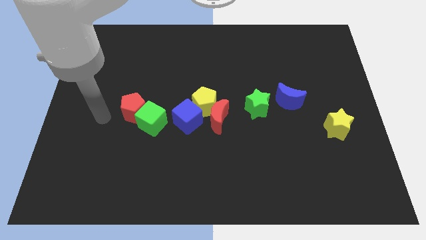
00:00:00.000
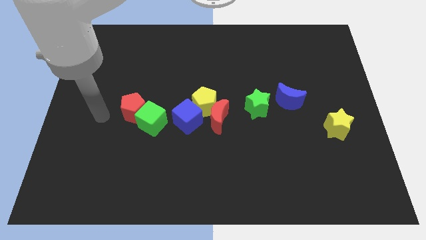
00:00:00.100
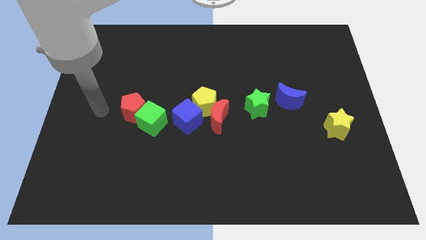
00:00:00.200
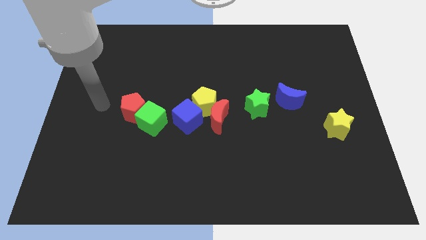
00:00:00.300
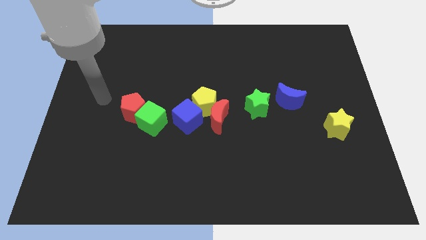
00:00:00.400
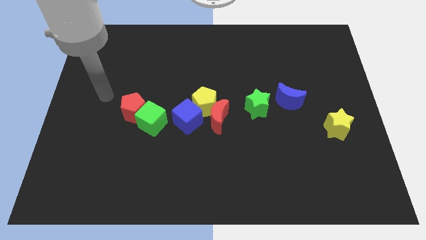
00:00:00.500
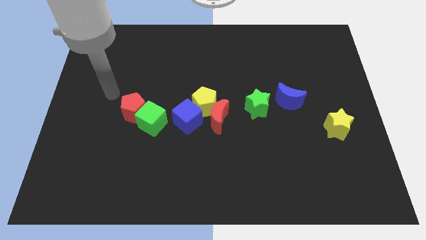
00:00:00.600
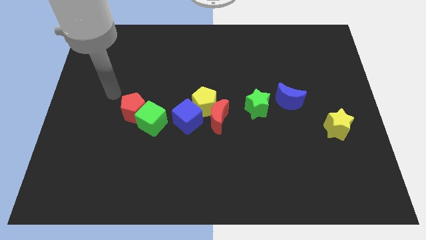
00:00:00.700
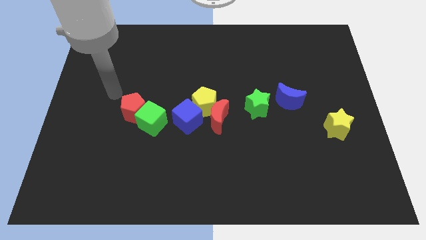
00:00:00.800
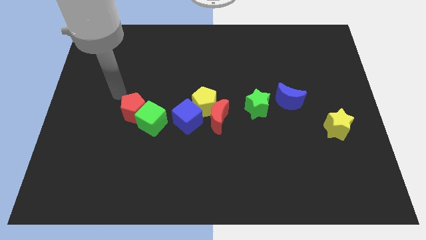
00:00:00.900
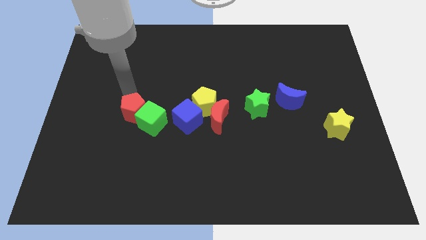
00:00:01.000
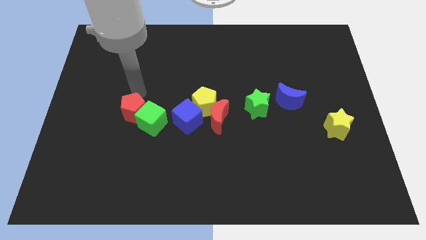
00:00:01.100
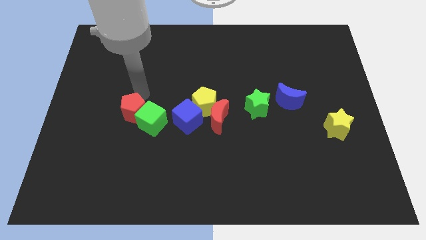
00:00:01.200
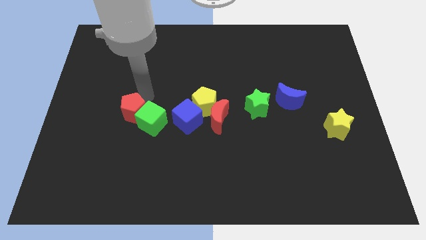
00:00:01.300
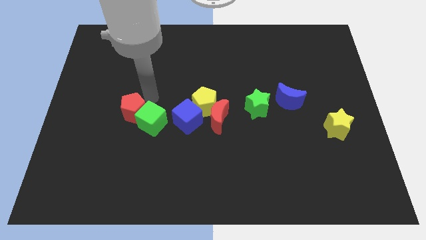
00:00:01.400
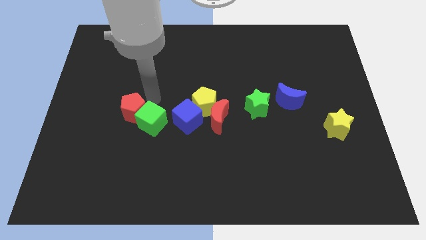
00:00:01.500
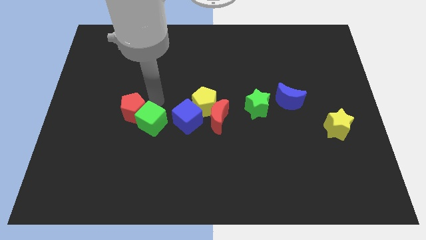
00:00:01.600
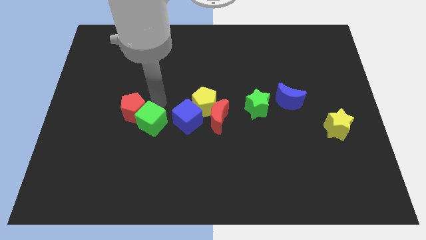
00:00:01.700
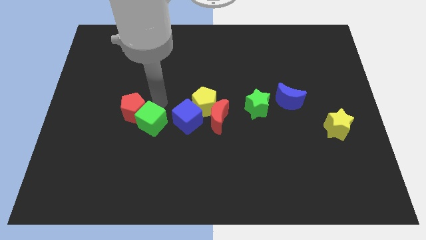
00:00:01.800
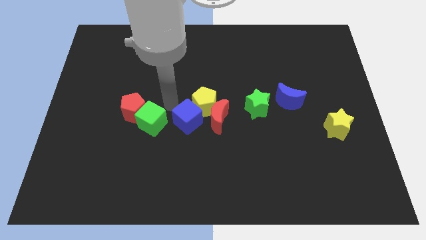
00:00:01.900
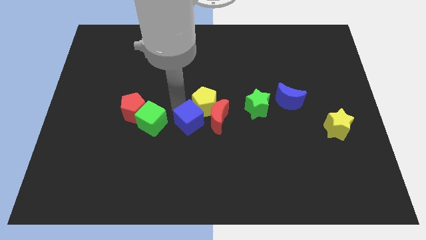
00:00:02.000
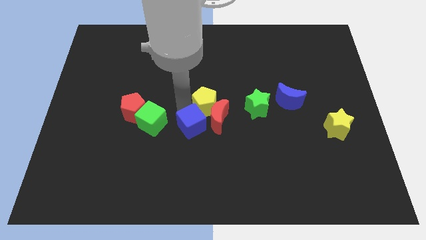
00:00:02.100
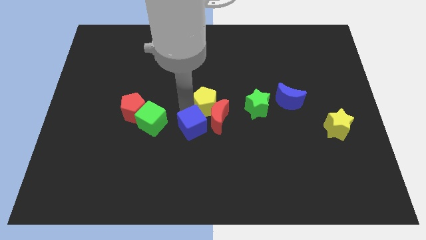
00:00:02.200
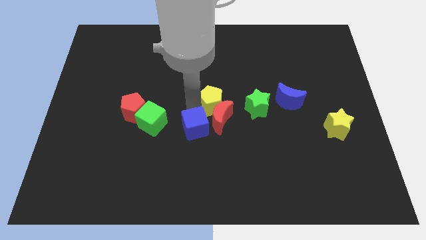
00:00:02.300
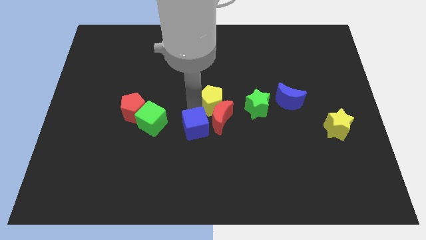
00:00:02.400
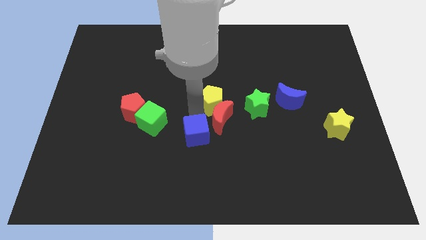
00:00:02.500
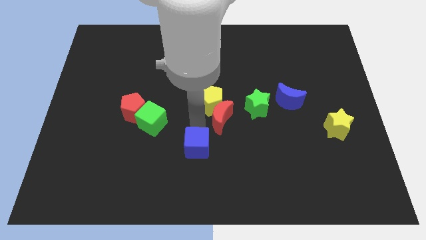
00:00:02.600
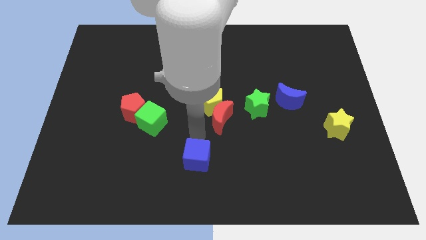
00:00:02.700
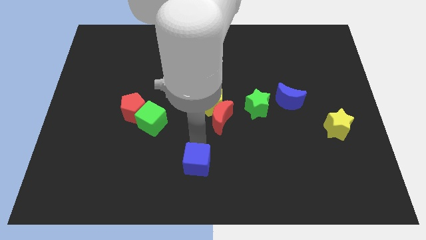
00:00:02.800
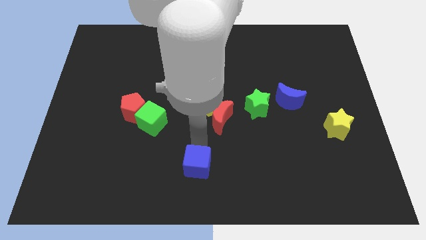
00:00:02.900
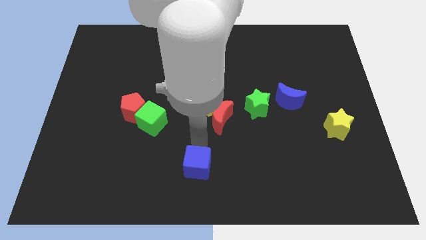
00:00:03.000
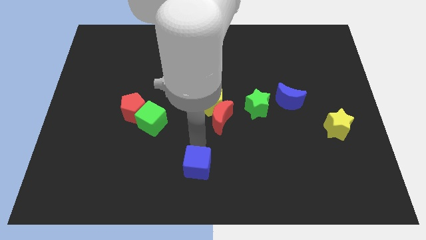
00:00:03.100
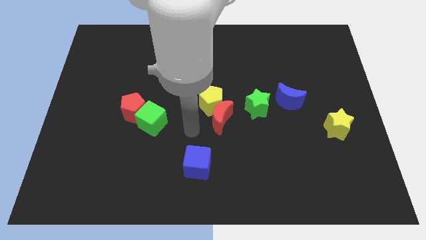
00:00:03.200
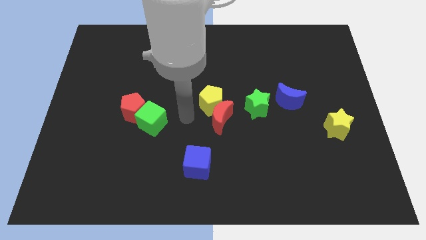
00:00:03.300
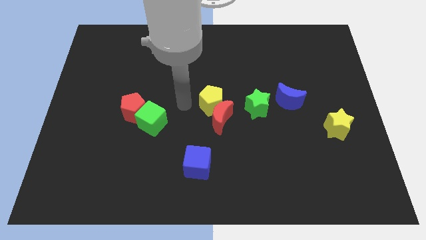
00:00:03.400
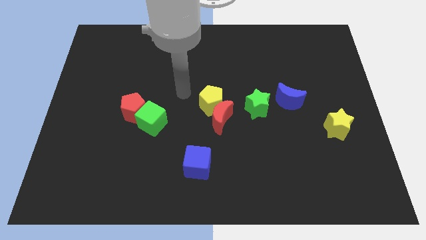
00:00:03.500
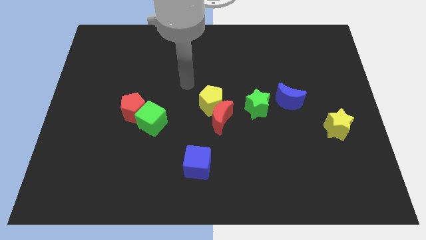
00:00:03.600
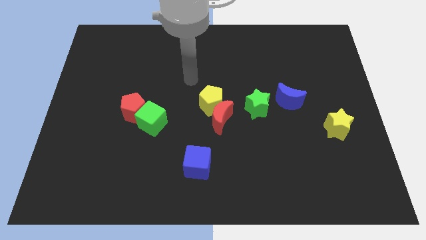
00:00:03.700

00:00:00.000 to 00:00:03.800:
separate the blue cube from the yellow pentagon

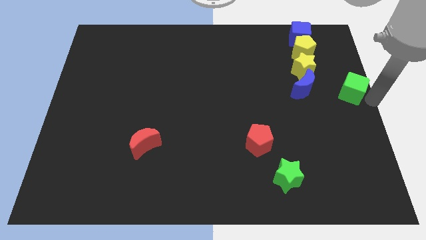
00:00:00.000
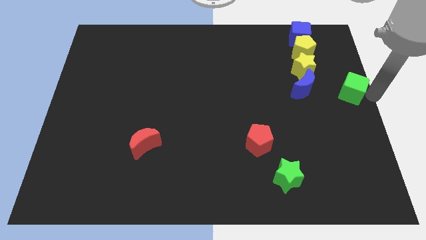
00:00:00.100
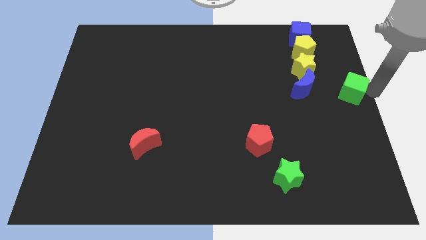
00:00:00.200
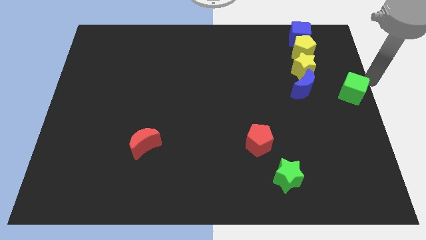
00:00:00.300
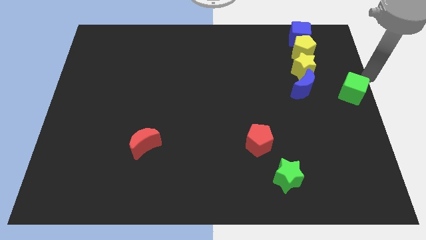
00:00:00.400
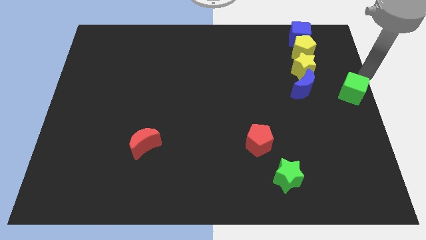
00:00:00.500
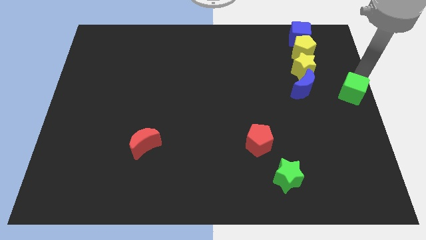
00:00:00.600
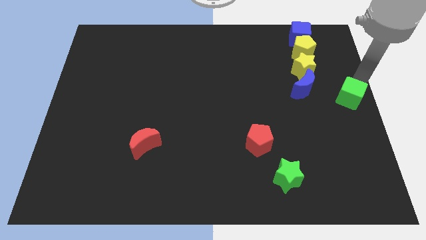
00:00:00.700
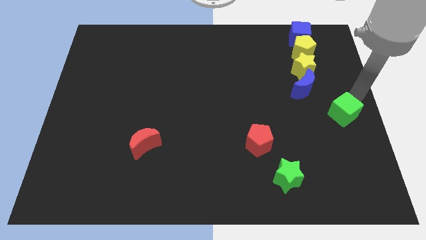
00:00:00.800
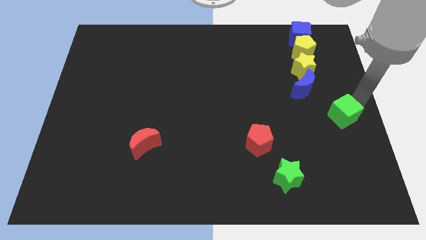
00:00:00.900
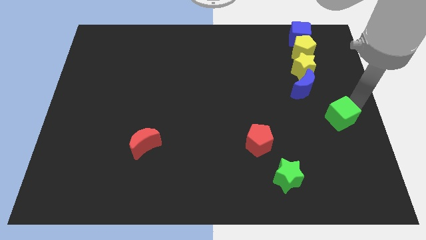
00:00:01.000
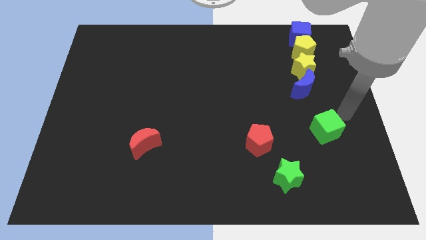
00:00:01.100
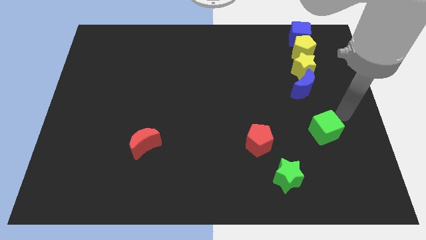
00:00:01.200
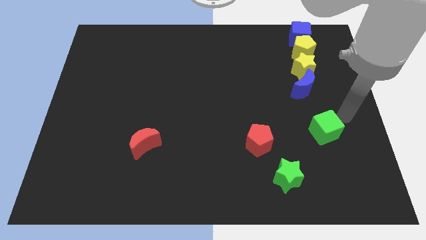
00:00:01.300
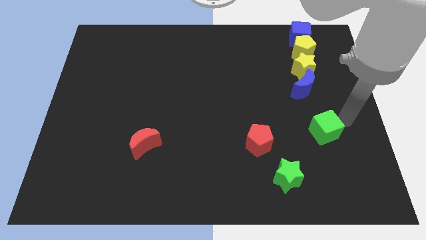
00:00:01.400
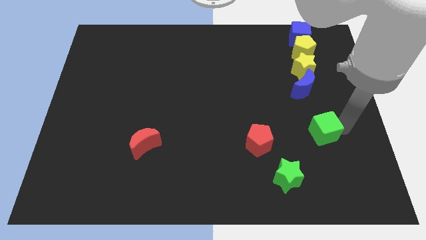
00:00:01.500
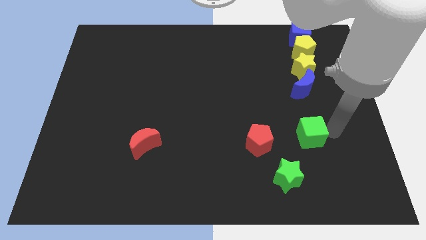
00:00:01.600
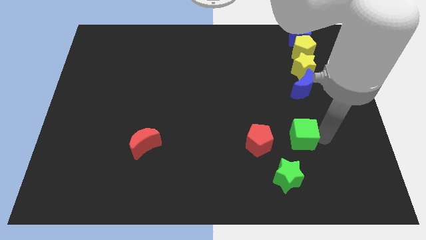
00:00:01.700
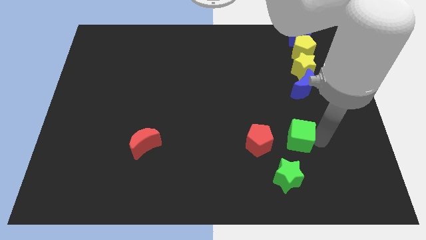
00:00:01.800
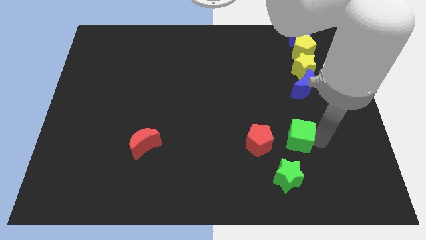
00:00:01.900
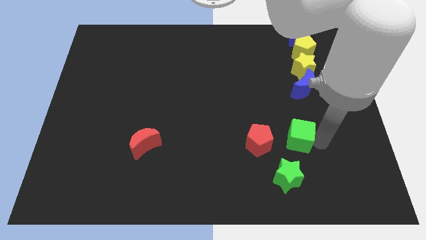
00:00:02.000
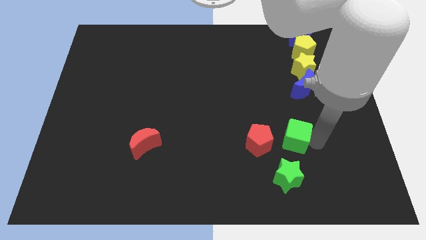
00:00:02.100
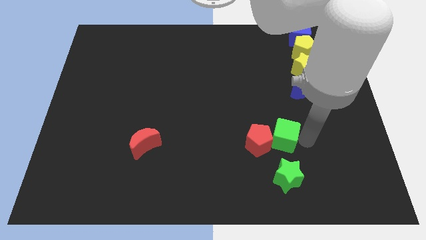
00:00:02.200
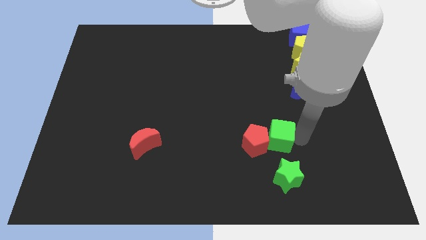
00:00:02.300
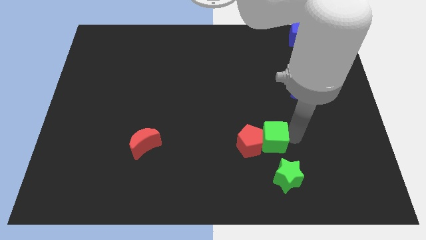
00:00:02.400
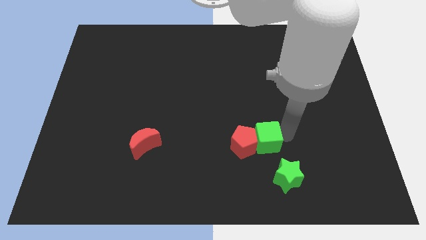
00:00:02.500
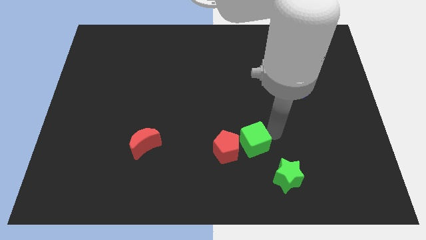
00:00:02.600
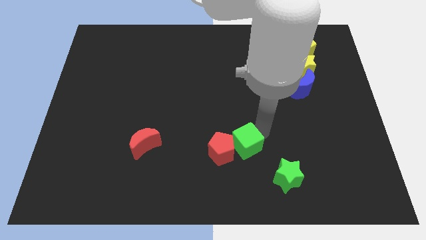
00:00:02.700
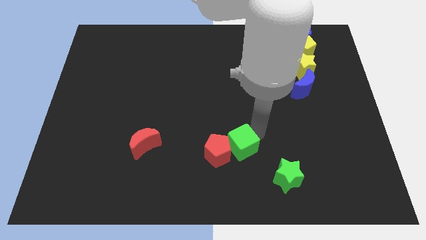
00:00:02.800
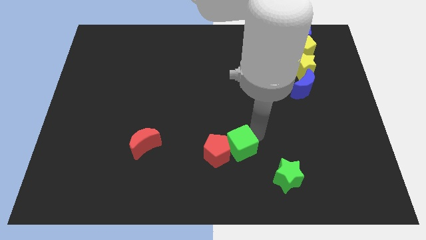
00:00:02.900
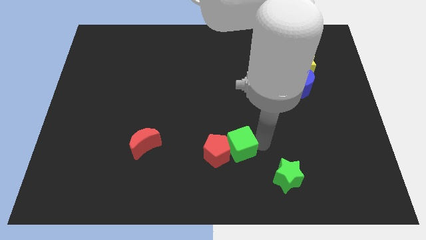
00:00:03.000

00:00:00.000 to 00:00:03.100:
push the green cube into the red pentagon

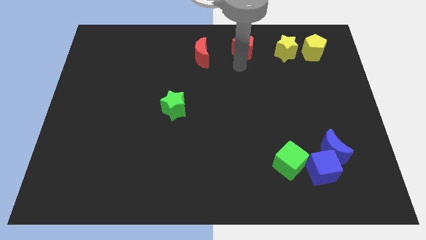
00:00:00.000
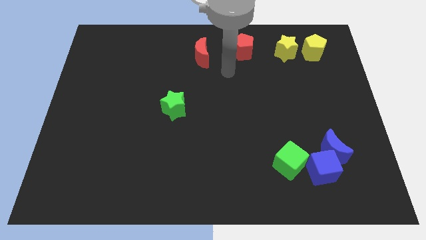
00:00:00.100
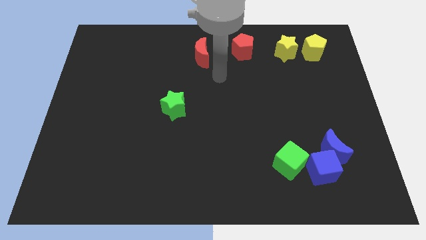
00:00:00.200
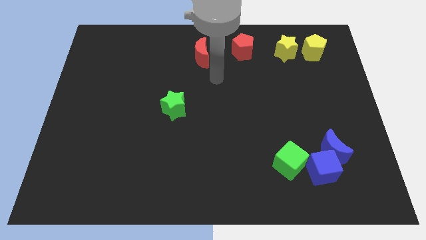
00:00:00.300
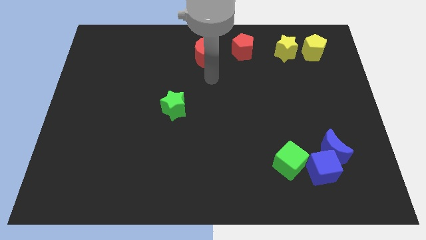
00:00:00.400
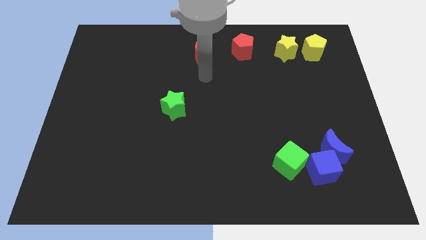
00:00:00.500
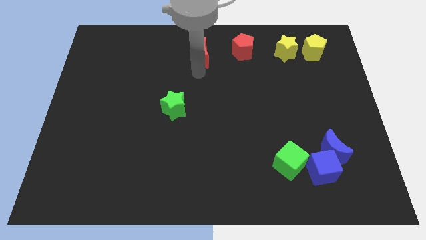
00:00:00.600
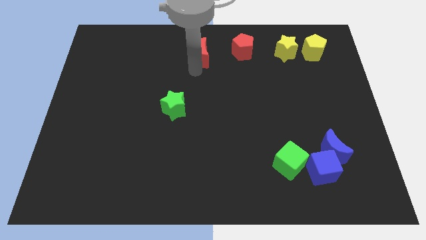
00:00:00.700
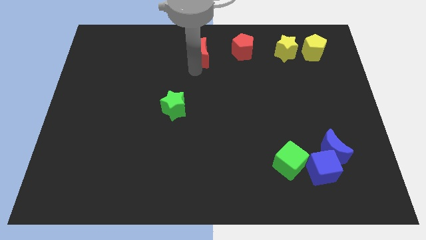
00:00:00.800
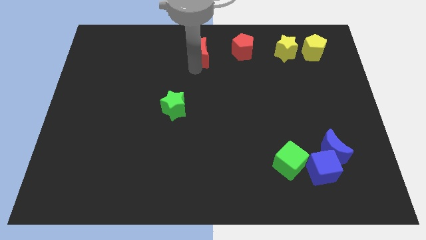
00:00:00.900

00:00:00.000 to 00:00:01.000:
place your arm below red moon

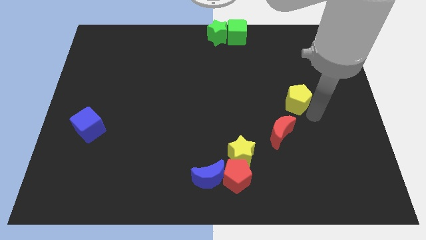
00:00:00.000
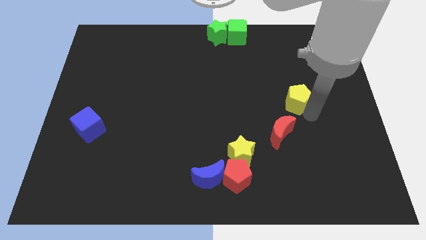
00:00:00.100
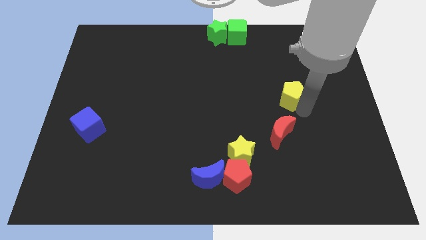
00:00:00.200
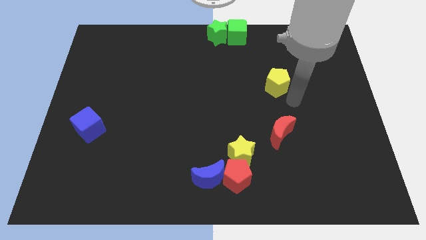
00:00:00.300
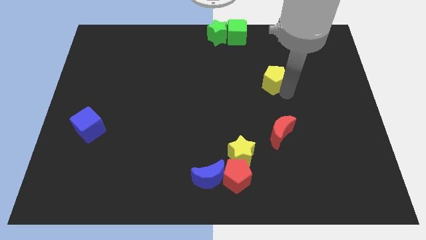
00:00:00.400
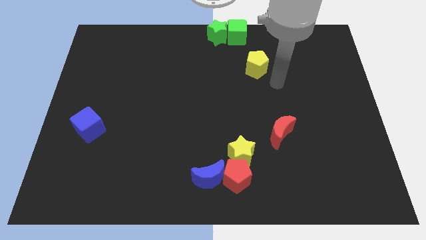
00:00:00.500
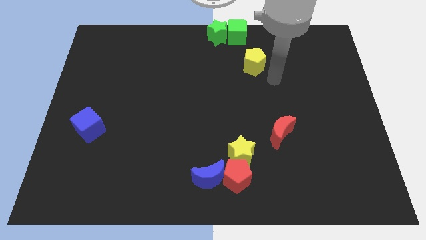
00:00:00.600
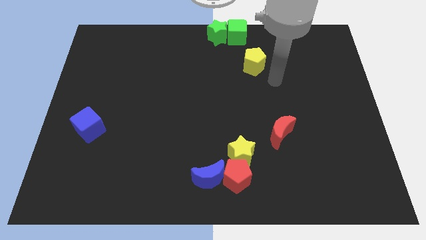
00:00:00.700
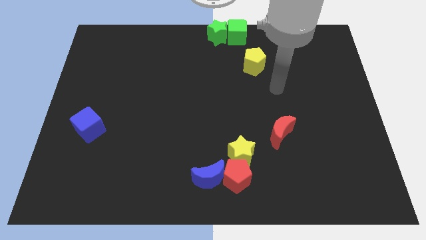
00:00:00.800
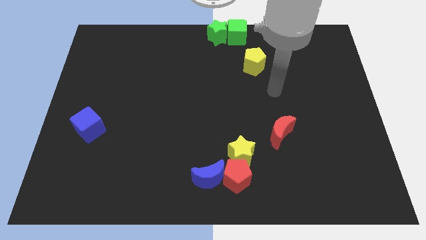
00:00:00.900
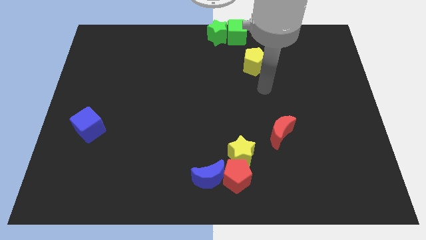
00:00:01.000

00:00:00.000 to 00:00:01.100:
move the yellow pentagon diagnol to the green cube
